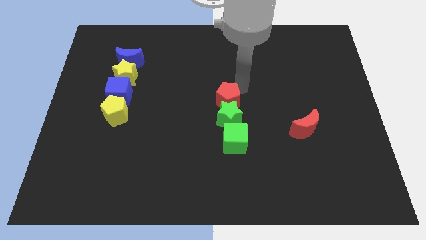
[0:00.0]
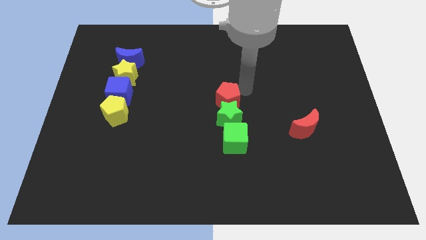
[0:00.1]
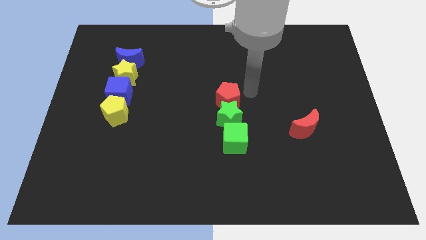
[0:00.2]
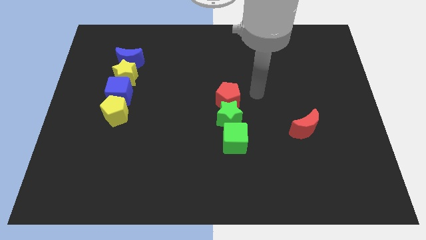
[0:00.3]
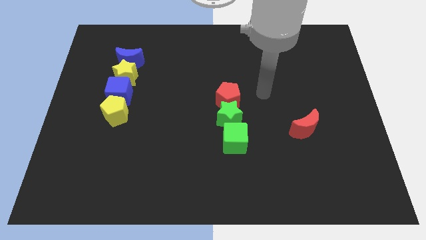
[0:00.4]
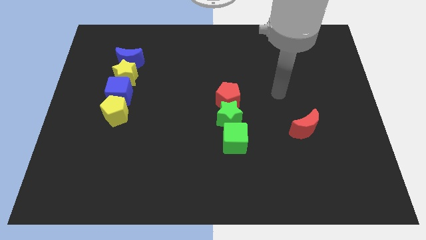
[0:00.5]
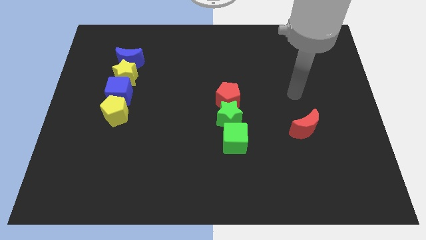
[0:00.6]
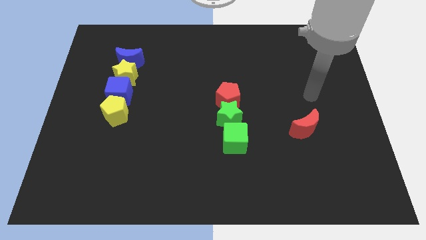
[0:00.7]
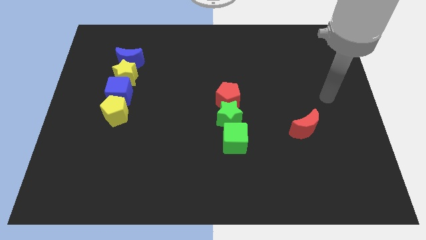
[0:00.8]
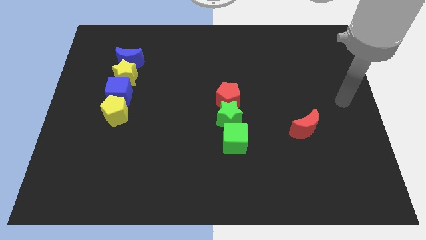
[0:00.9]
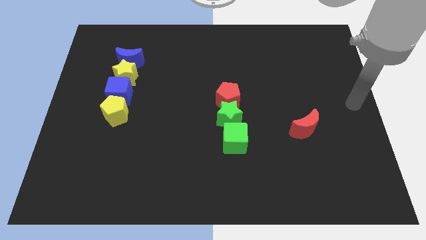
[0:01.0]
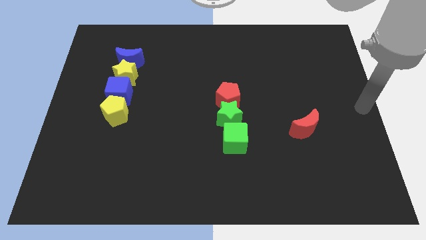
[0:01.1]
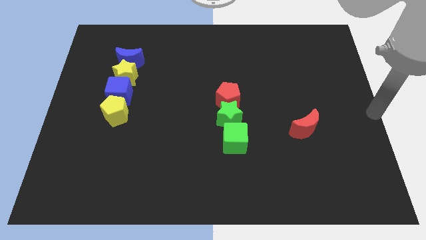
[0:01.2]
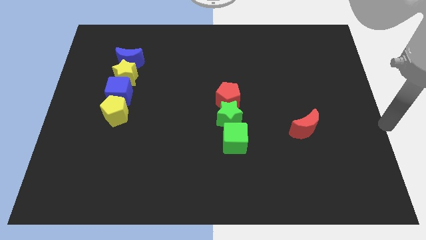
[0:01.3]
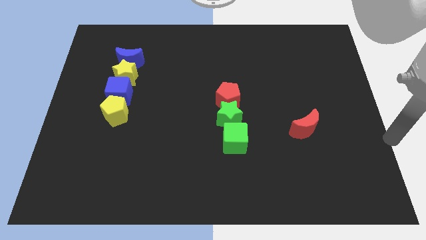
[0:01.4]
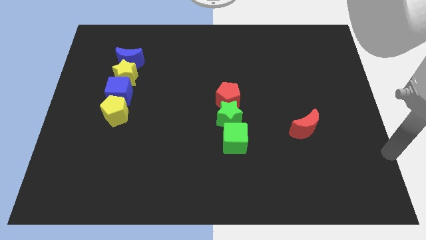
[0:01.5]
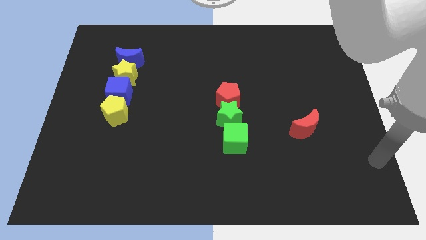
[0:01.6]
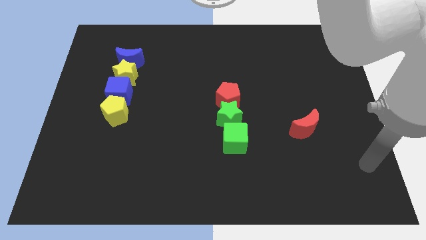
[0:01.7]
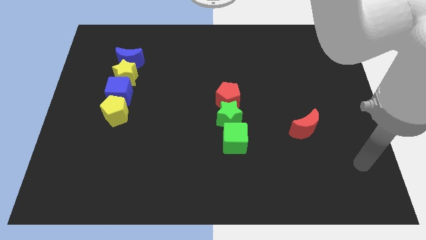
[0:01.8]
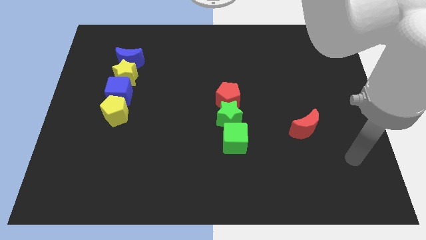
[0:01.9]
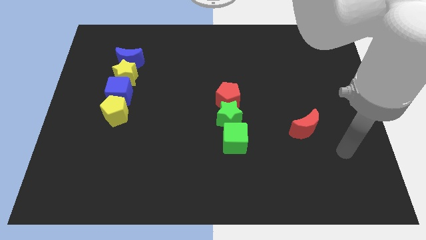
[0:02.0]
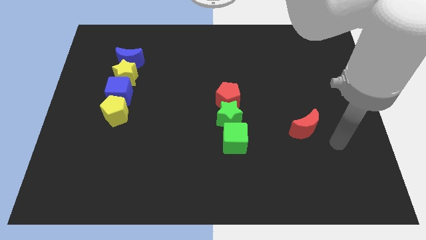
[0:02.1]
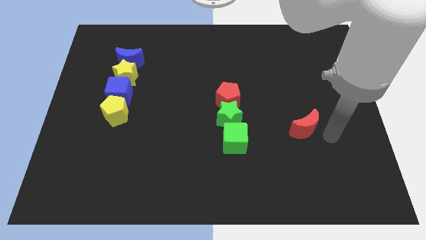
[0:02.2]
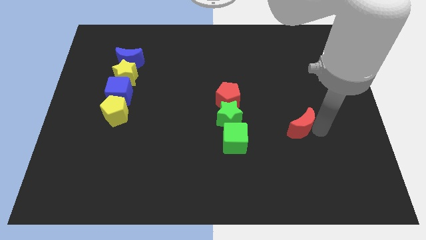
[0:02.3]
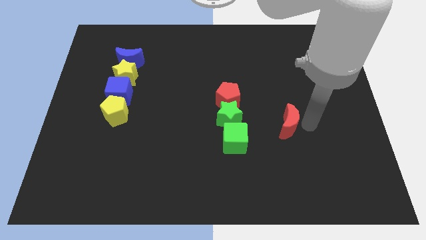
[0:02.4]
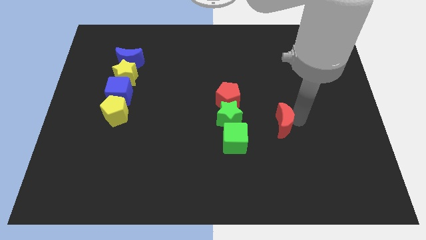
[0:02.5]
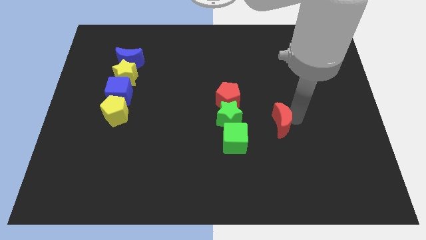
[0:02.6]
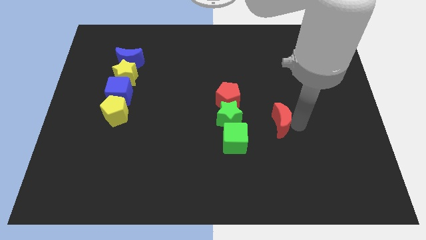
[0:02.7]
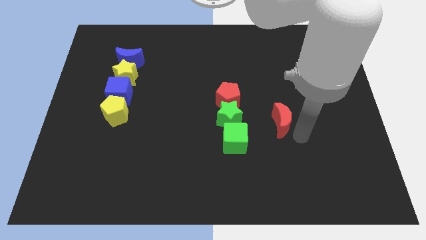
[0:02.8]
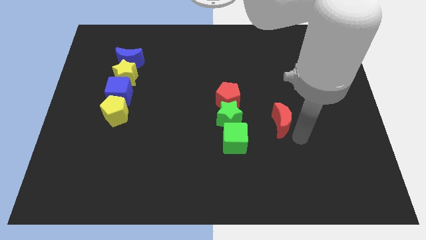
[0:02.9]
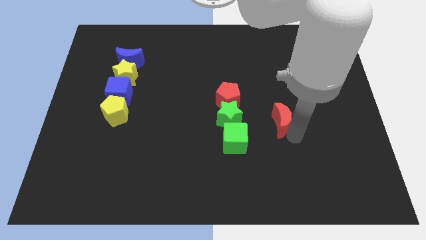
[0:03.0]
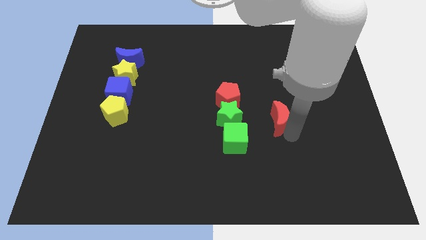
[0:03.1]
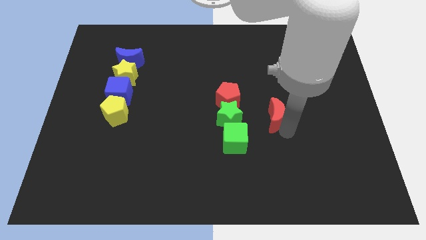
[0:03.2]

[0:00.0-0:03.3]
move the red crescent slightly to the left

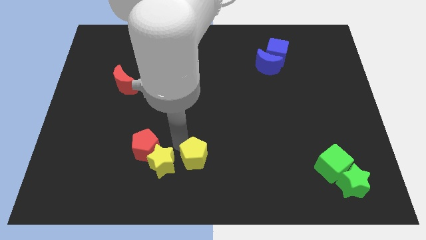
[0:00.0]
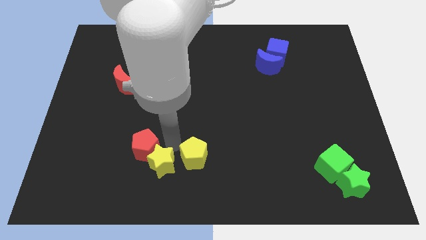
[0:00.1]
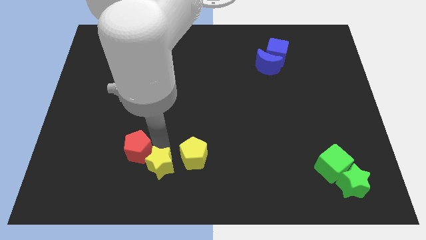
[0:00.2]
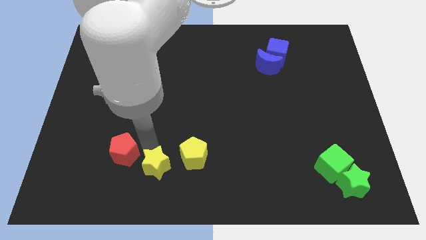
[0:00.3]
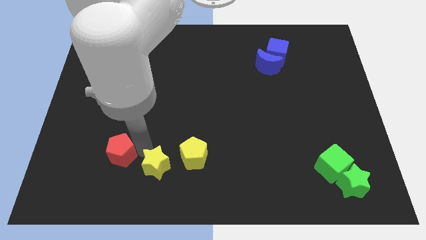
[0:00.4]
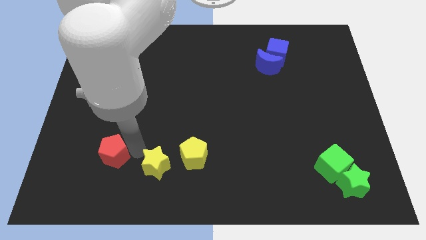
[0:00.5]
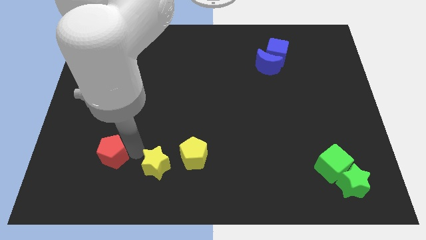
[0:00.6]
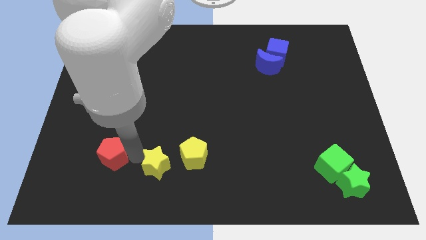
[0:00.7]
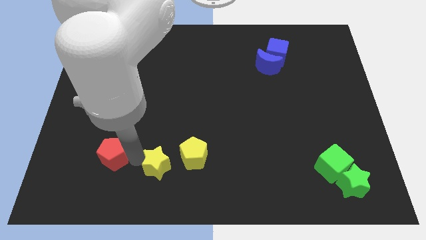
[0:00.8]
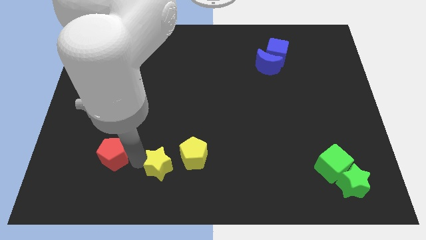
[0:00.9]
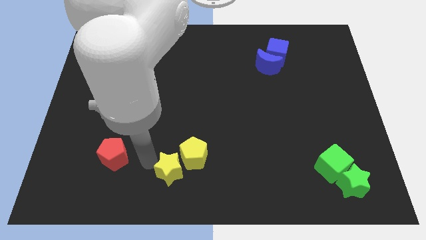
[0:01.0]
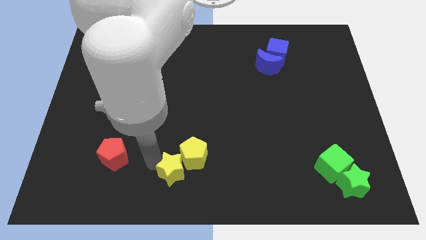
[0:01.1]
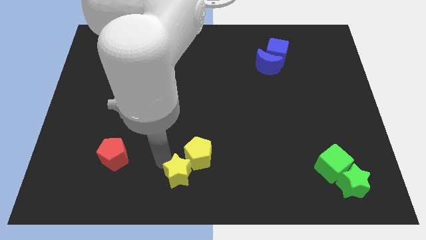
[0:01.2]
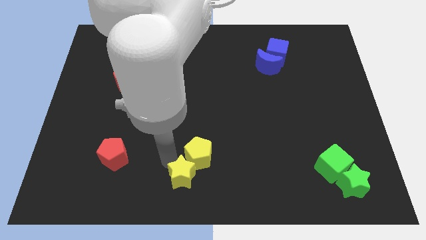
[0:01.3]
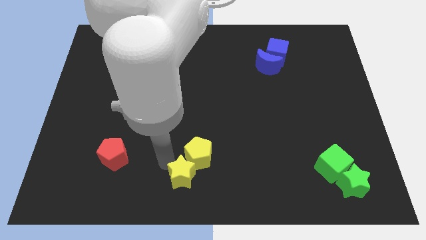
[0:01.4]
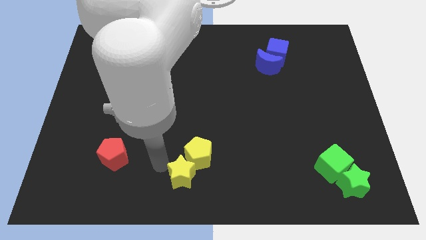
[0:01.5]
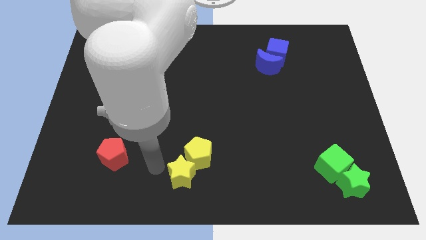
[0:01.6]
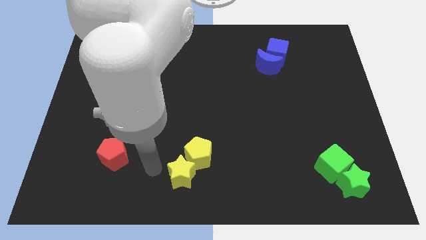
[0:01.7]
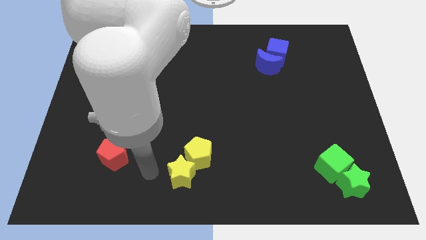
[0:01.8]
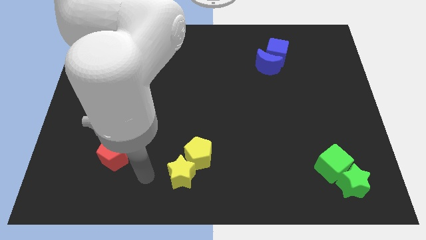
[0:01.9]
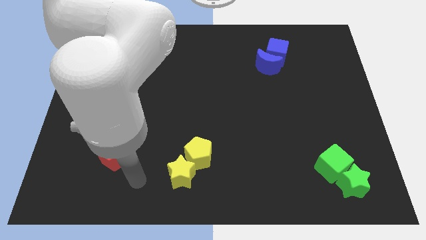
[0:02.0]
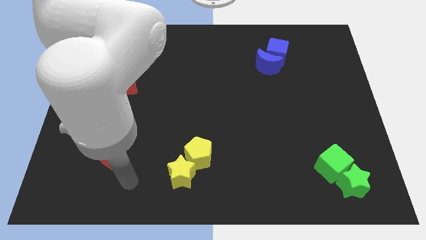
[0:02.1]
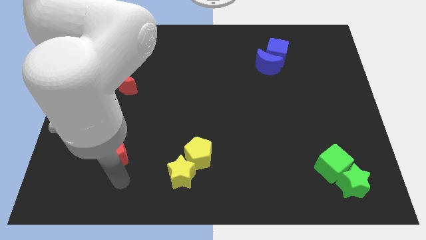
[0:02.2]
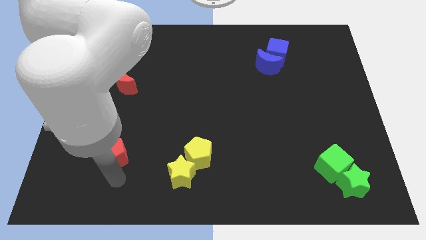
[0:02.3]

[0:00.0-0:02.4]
move the yellow star into the yellow pentagon

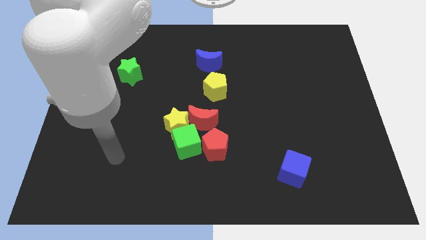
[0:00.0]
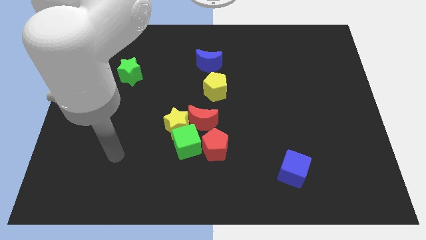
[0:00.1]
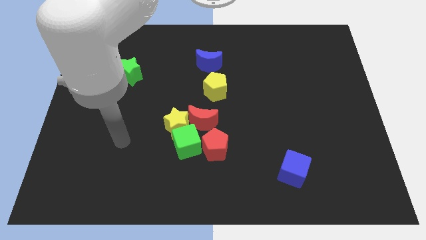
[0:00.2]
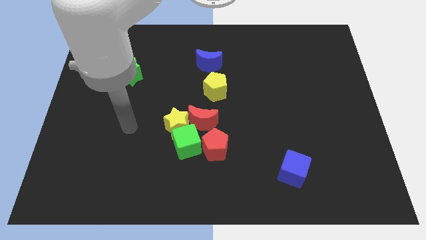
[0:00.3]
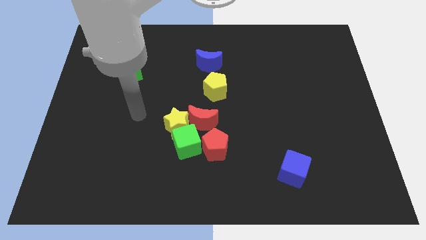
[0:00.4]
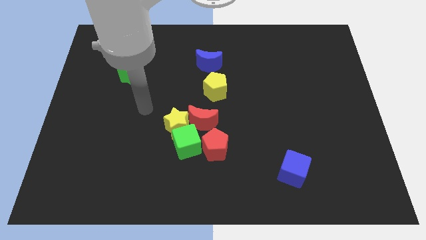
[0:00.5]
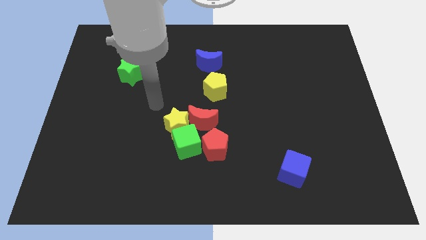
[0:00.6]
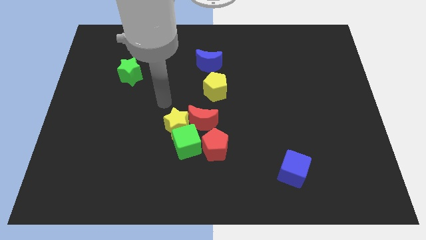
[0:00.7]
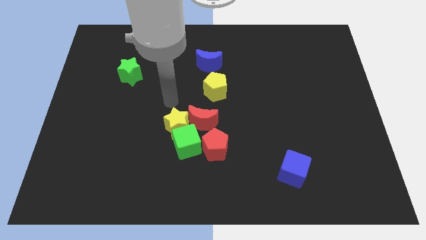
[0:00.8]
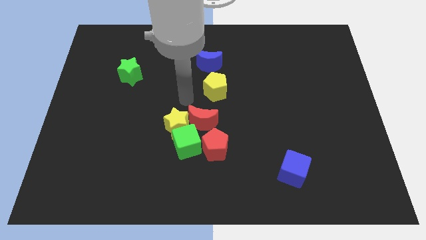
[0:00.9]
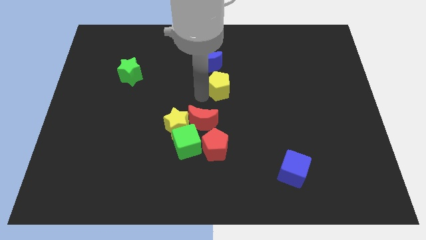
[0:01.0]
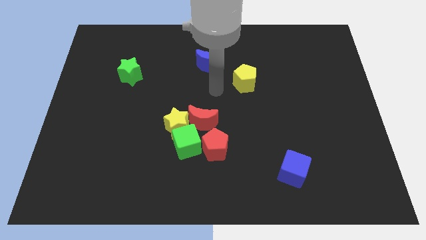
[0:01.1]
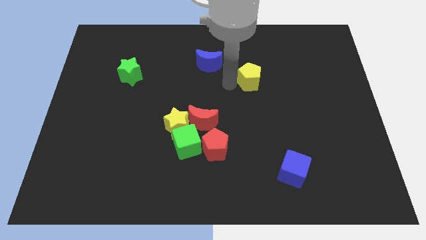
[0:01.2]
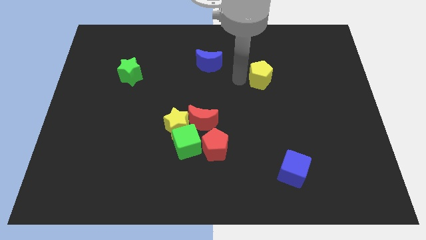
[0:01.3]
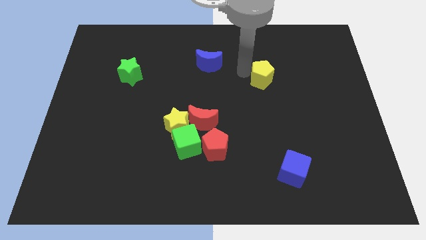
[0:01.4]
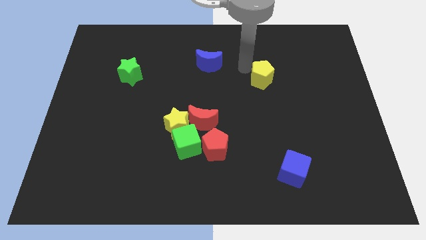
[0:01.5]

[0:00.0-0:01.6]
push the yellow pentagon to the right

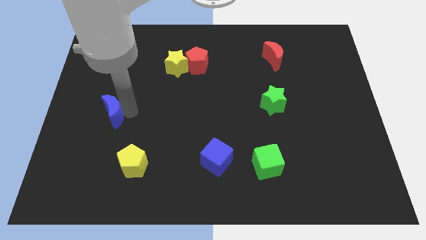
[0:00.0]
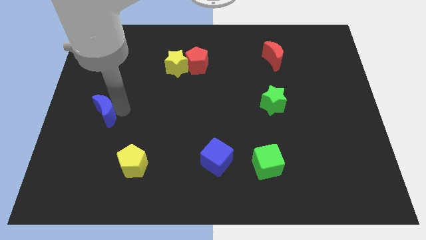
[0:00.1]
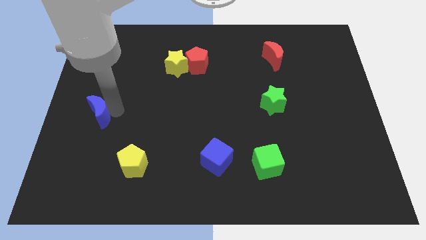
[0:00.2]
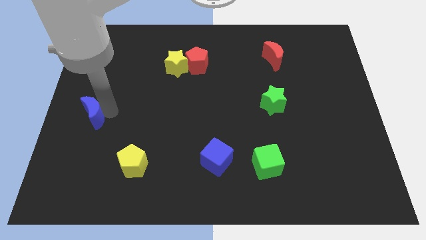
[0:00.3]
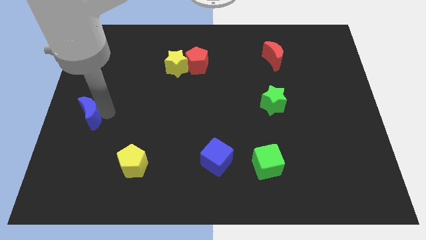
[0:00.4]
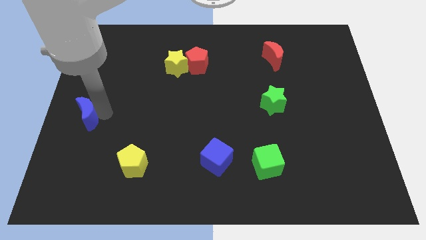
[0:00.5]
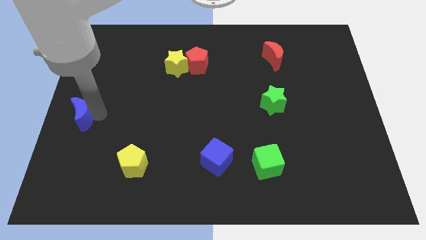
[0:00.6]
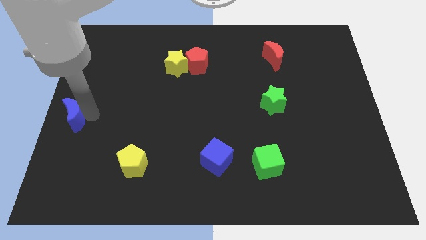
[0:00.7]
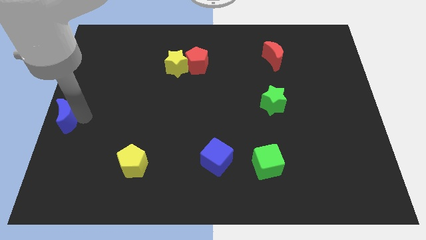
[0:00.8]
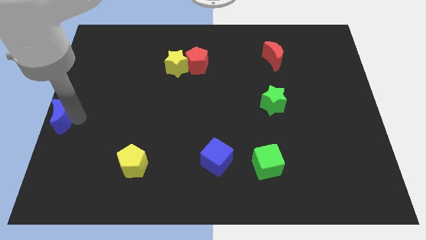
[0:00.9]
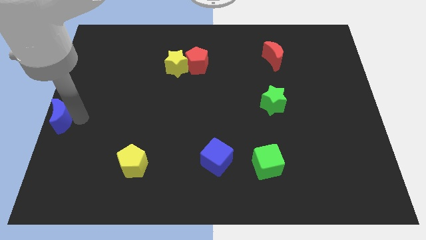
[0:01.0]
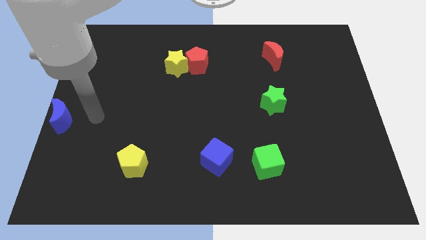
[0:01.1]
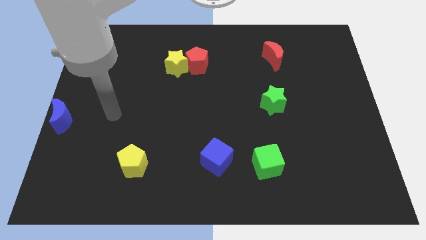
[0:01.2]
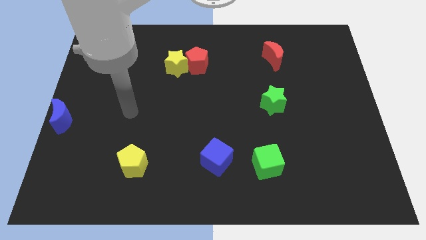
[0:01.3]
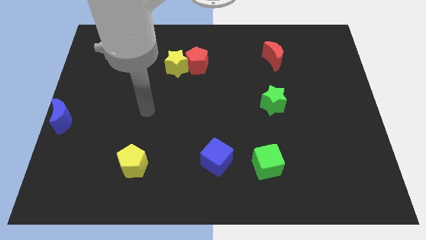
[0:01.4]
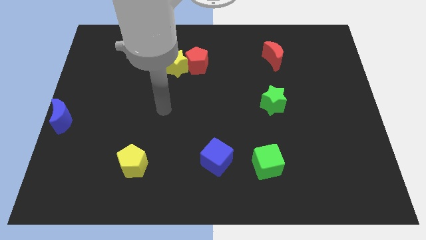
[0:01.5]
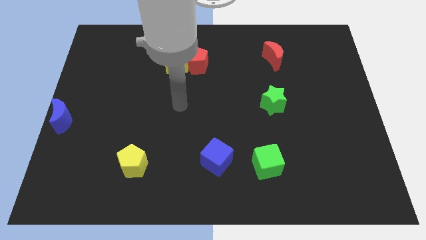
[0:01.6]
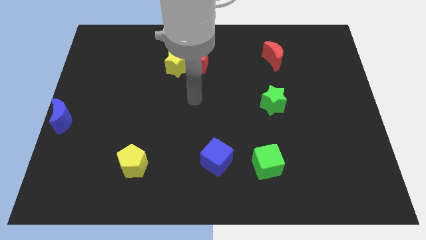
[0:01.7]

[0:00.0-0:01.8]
push the blue moon to the left center of the board
